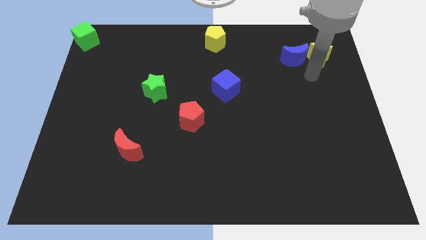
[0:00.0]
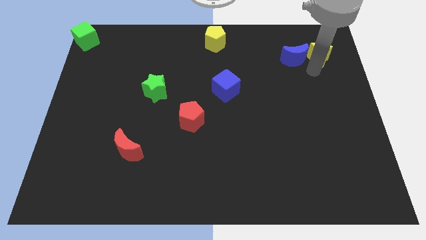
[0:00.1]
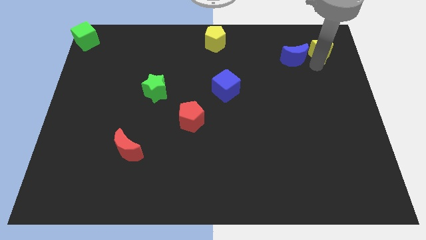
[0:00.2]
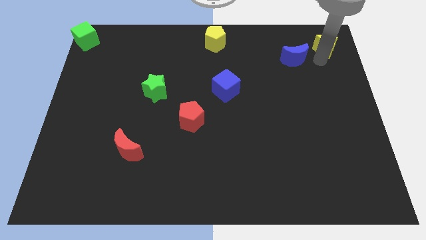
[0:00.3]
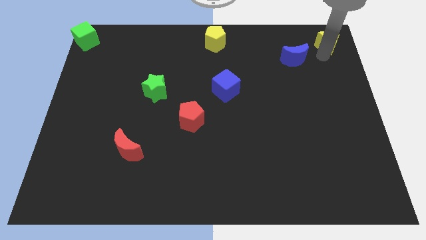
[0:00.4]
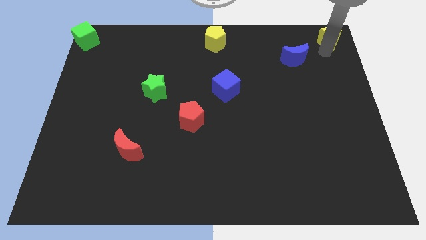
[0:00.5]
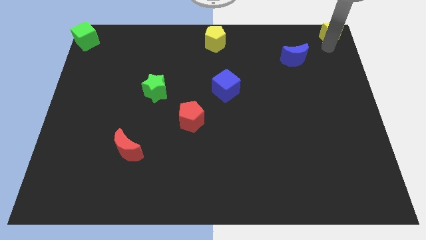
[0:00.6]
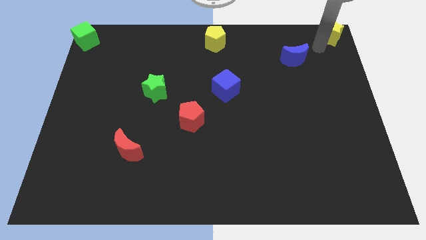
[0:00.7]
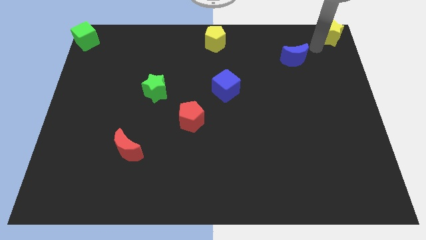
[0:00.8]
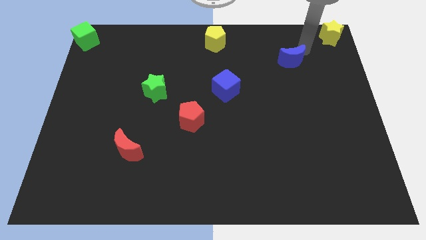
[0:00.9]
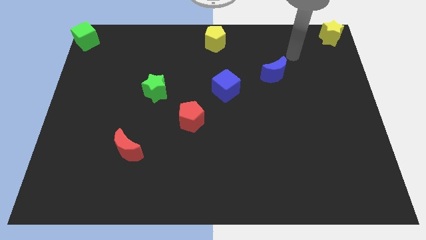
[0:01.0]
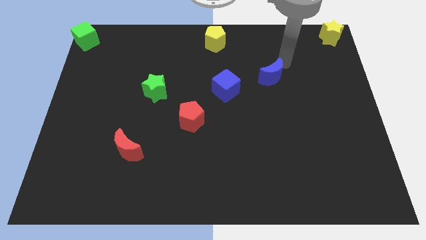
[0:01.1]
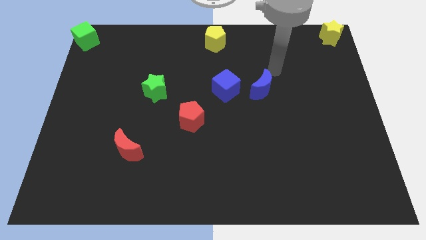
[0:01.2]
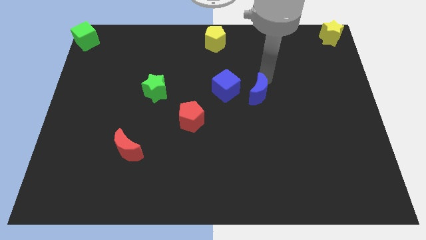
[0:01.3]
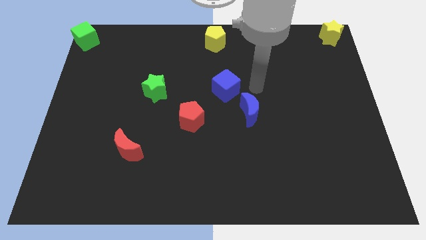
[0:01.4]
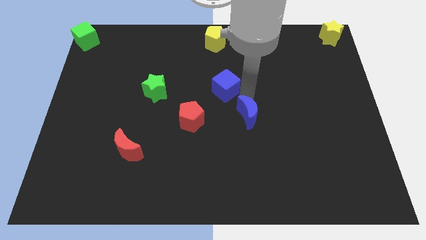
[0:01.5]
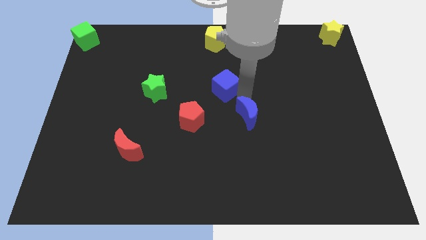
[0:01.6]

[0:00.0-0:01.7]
separate the yellow star and blue crescent

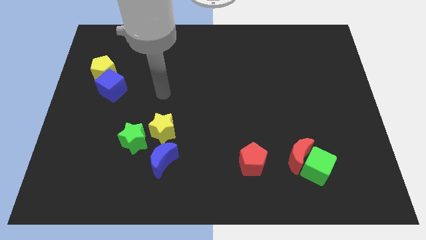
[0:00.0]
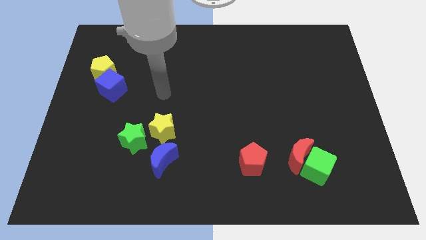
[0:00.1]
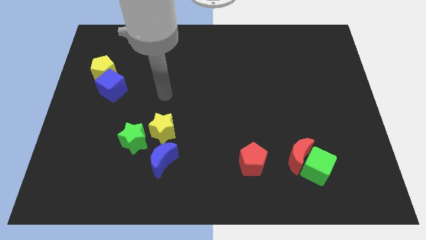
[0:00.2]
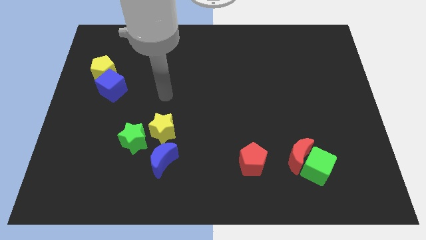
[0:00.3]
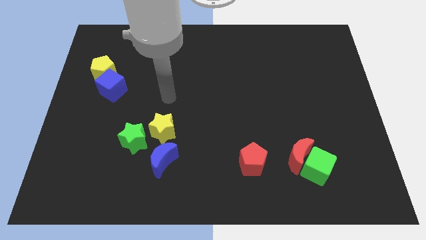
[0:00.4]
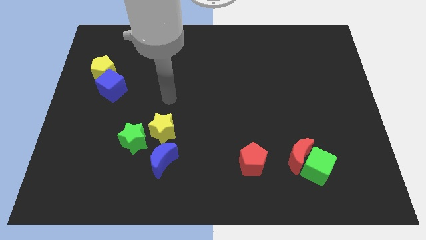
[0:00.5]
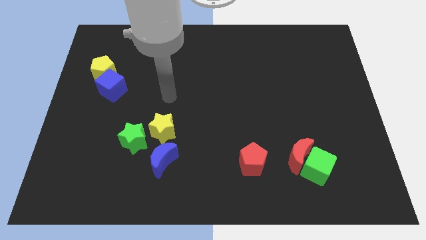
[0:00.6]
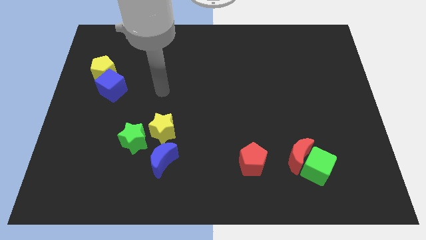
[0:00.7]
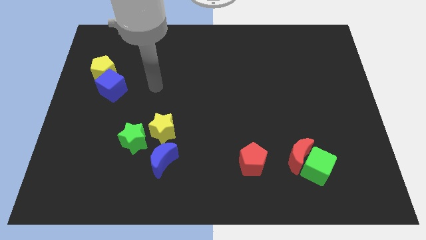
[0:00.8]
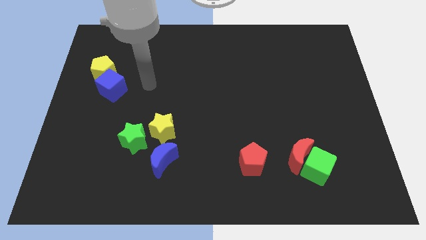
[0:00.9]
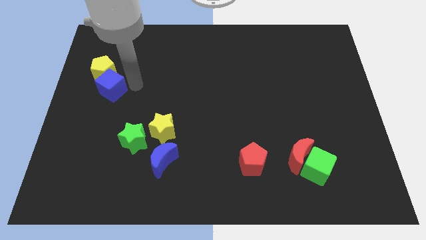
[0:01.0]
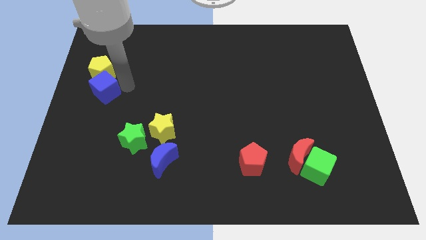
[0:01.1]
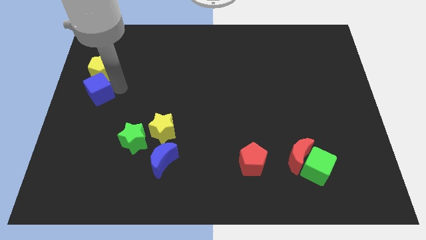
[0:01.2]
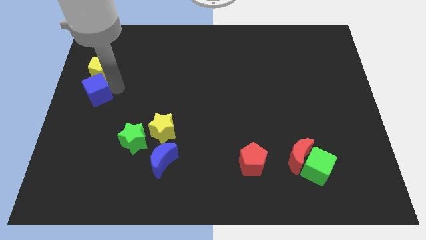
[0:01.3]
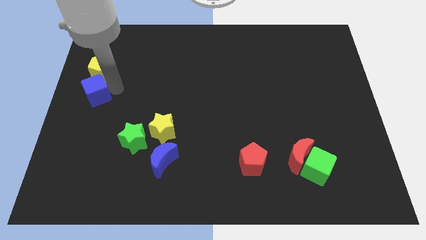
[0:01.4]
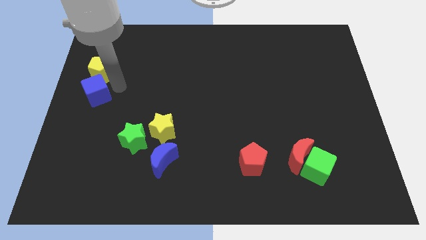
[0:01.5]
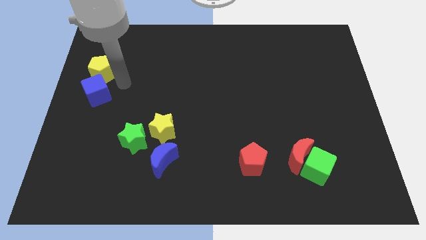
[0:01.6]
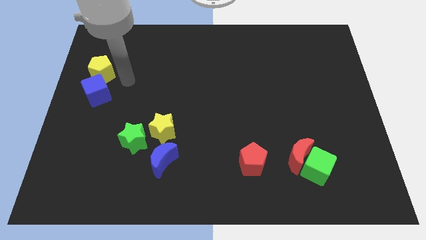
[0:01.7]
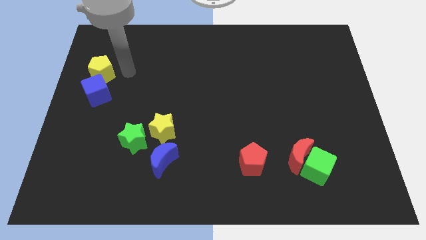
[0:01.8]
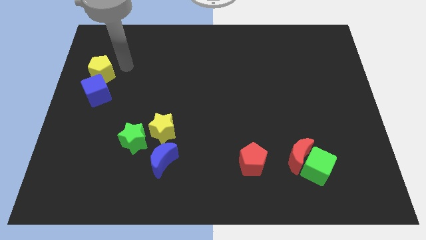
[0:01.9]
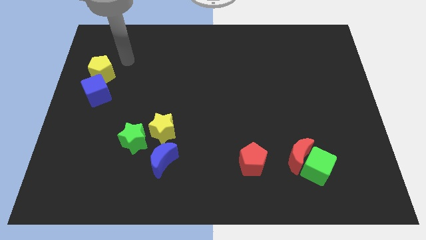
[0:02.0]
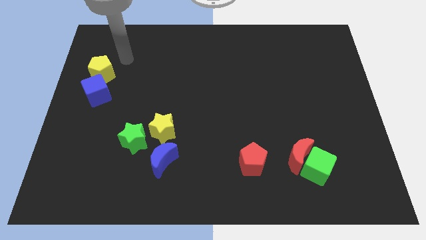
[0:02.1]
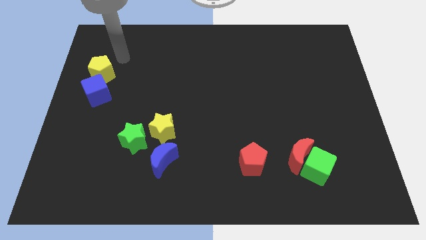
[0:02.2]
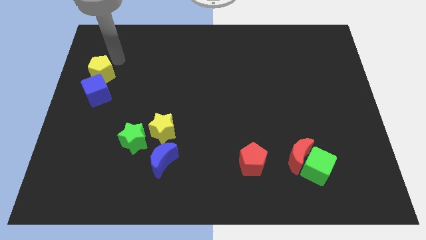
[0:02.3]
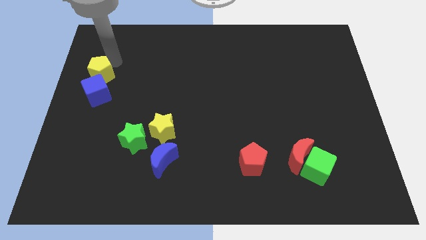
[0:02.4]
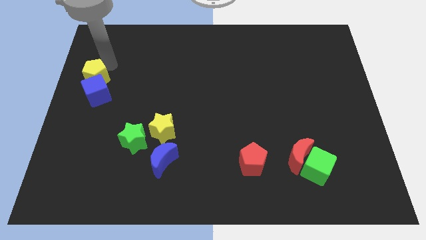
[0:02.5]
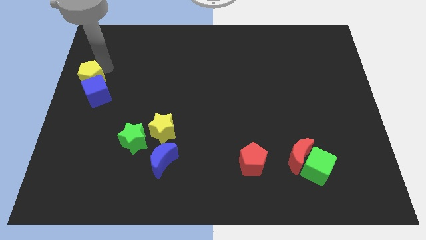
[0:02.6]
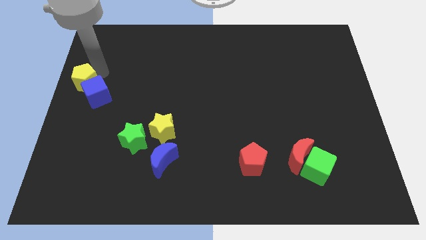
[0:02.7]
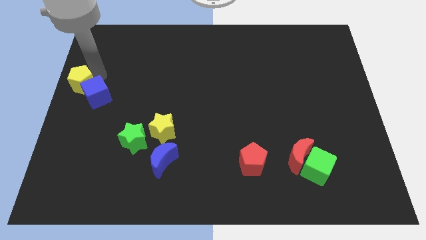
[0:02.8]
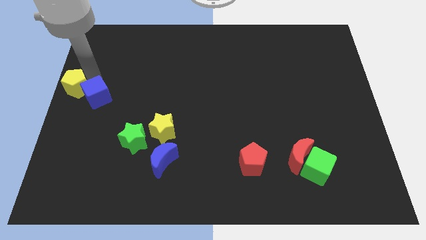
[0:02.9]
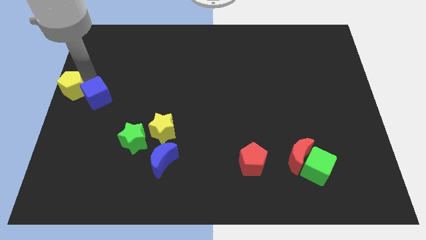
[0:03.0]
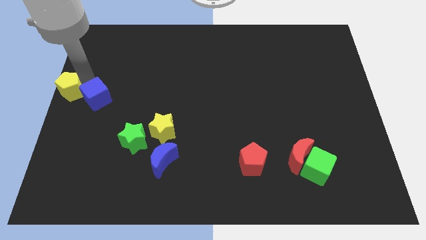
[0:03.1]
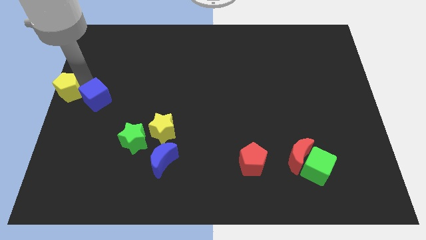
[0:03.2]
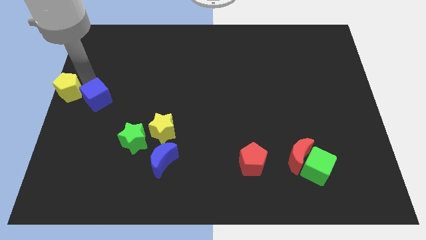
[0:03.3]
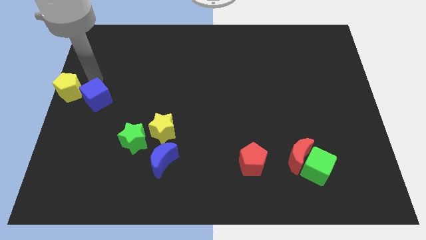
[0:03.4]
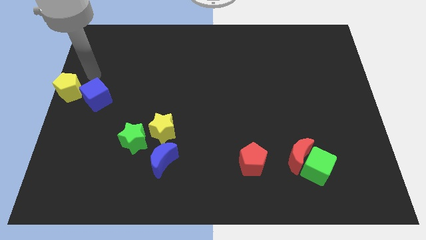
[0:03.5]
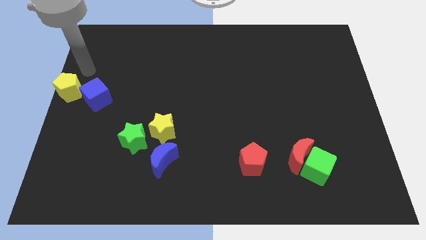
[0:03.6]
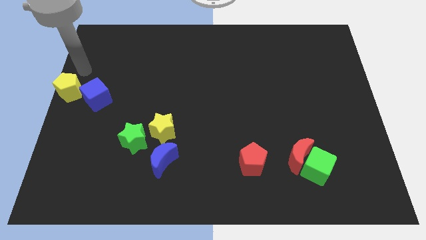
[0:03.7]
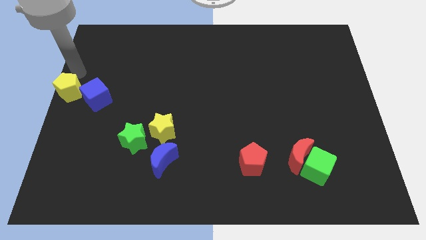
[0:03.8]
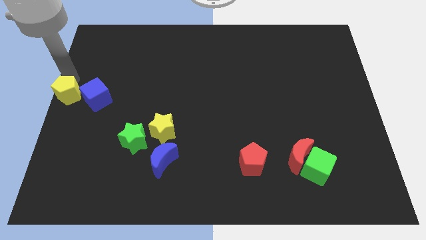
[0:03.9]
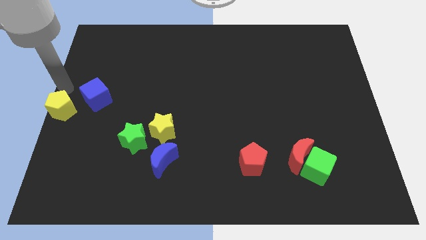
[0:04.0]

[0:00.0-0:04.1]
place the yellow pentagon to the left of the blue cube

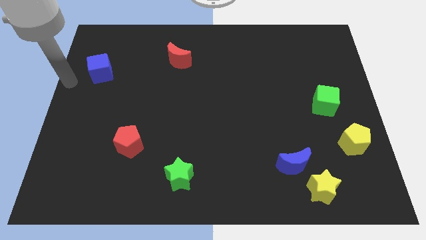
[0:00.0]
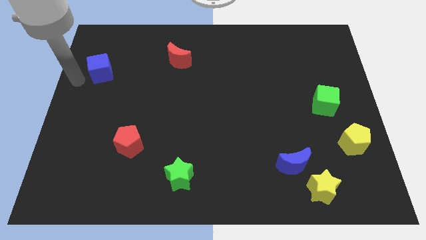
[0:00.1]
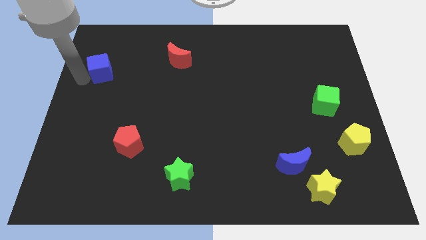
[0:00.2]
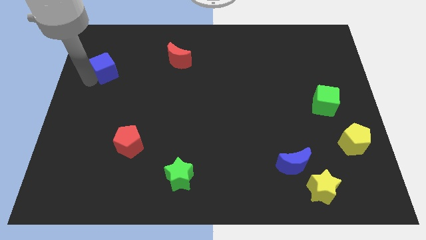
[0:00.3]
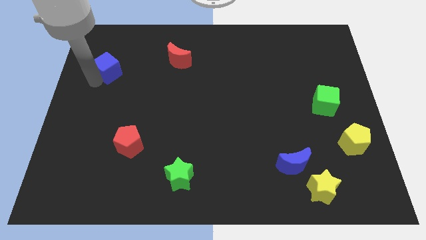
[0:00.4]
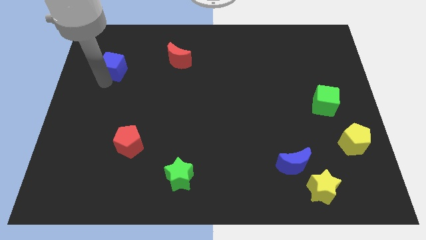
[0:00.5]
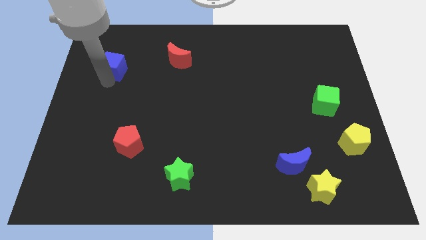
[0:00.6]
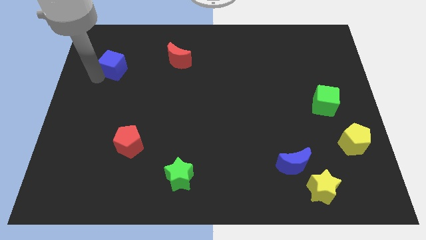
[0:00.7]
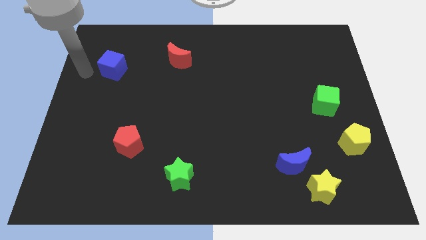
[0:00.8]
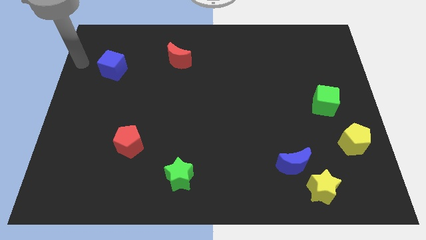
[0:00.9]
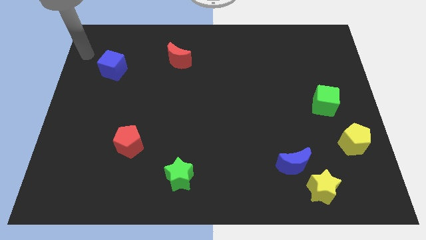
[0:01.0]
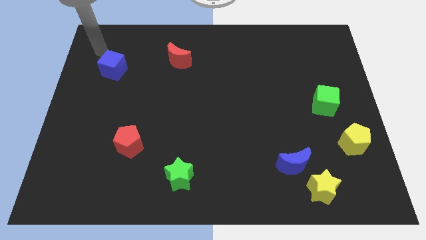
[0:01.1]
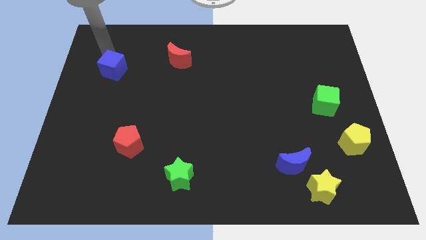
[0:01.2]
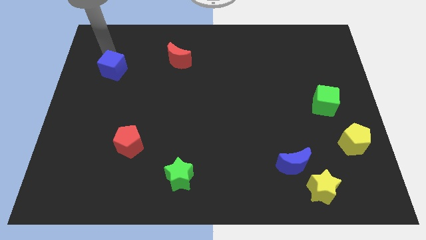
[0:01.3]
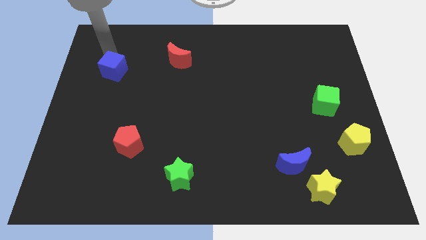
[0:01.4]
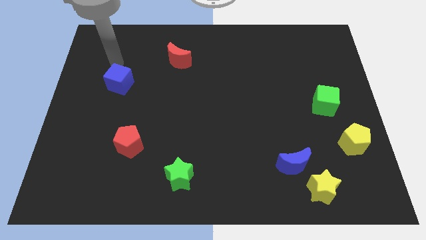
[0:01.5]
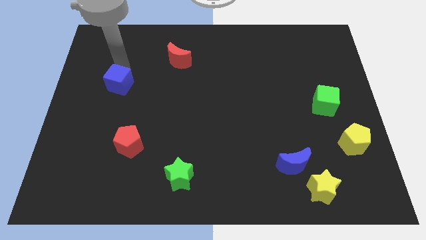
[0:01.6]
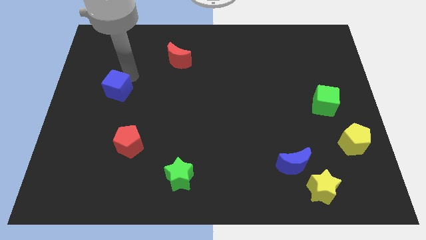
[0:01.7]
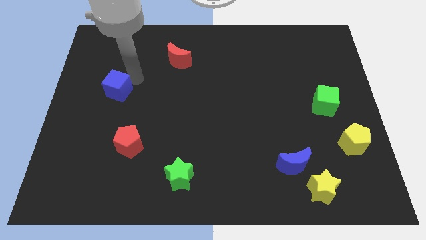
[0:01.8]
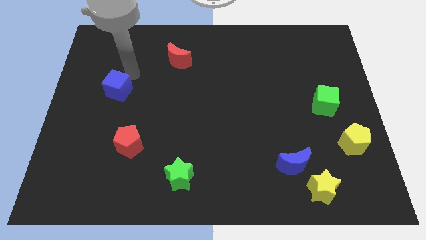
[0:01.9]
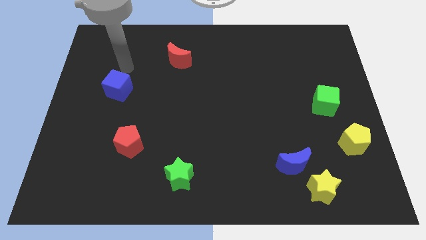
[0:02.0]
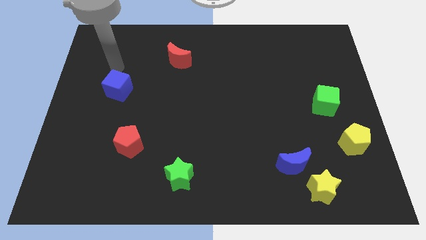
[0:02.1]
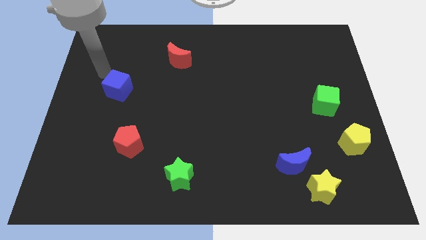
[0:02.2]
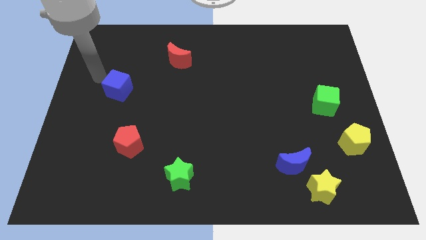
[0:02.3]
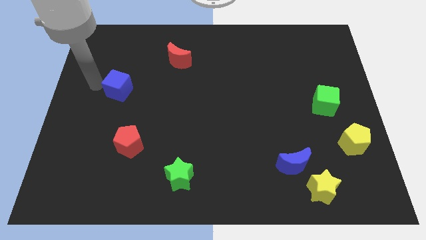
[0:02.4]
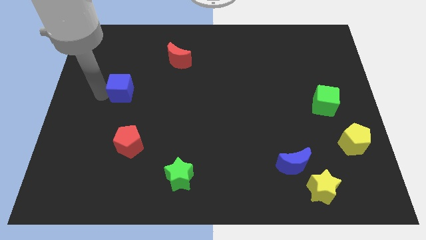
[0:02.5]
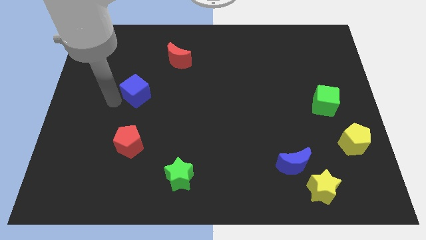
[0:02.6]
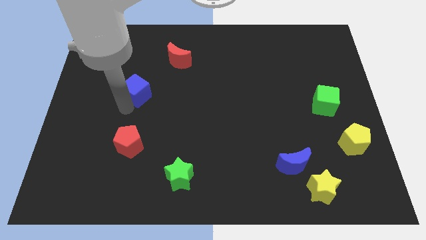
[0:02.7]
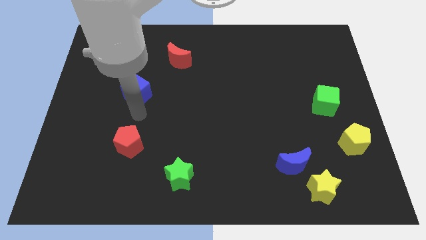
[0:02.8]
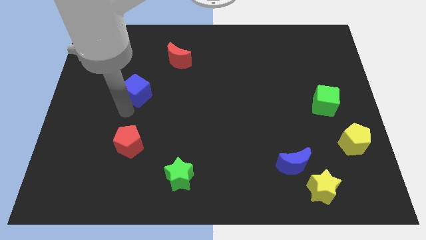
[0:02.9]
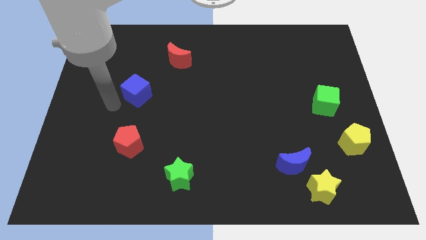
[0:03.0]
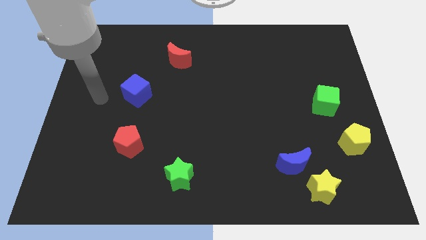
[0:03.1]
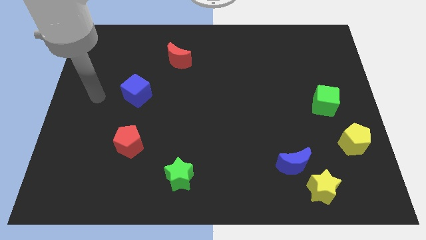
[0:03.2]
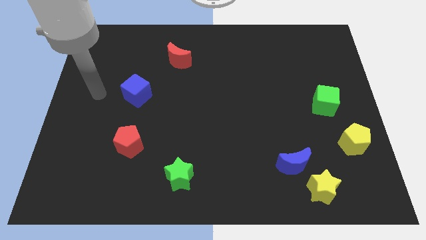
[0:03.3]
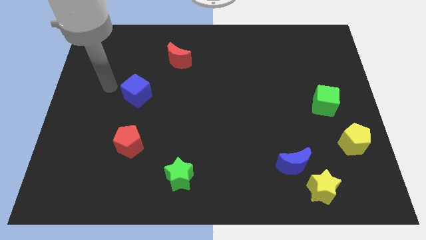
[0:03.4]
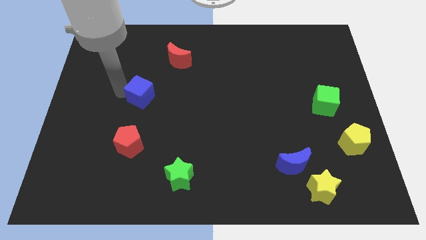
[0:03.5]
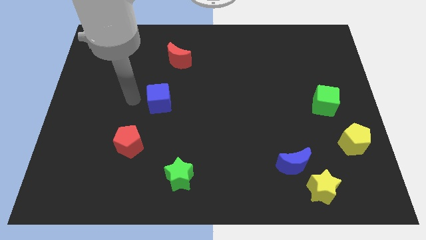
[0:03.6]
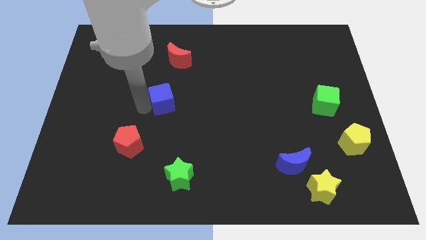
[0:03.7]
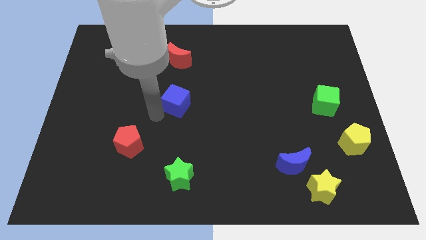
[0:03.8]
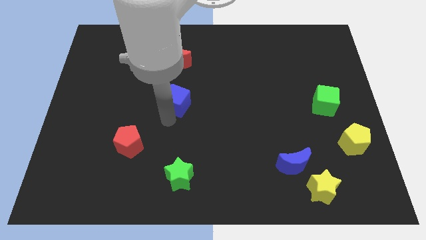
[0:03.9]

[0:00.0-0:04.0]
push the blue cube diagonally to the bottom
